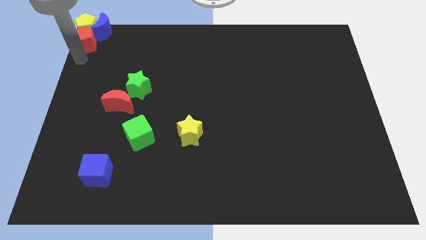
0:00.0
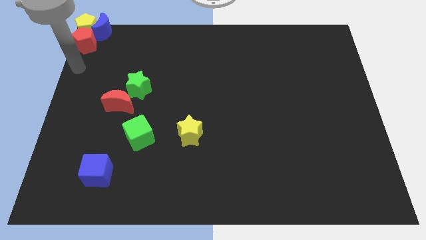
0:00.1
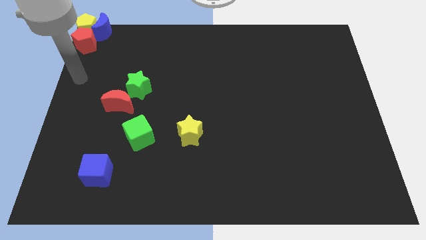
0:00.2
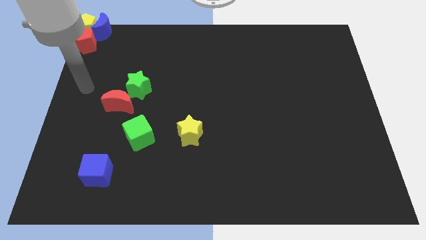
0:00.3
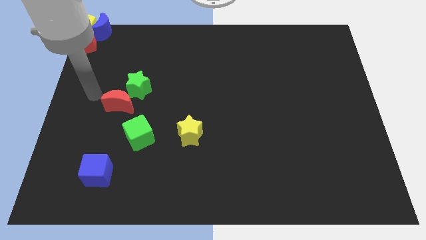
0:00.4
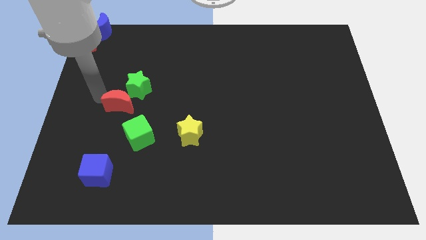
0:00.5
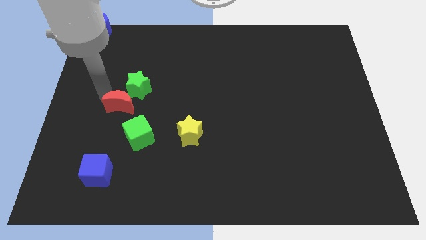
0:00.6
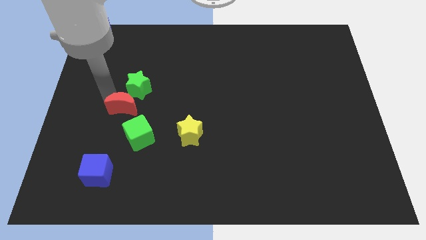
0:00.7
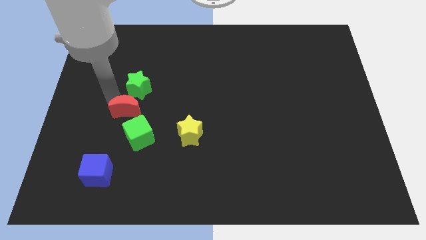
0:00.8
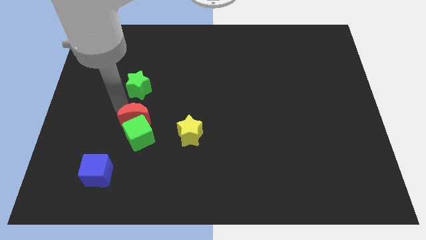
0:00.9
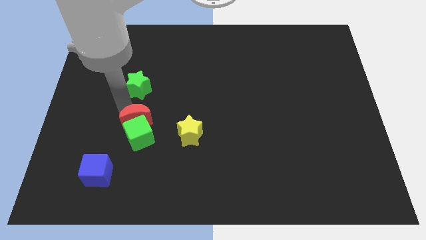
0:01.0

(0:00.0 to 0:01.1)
place the red crescent in between the green blocks

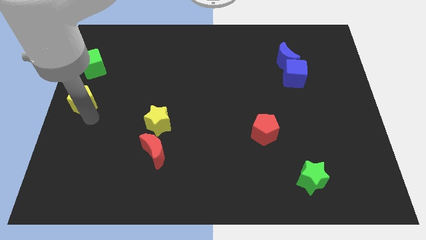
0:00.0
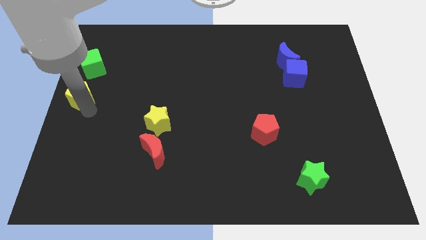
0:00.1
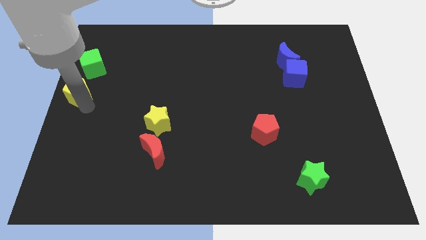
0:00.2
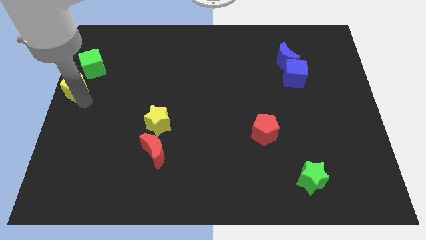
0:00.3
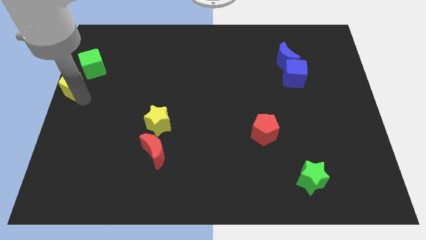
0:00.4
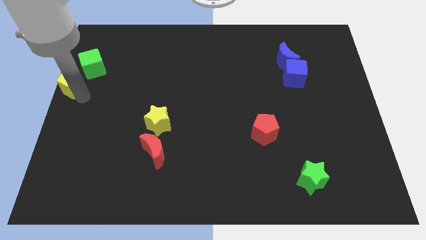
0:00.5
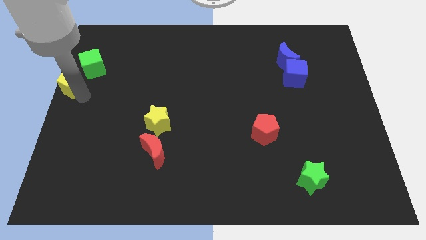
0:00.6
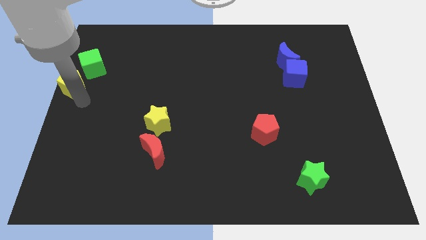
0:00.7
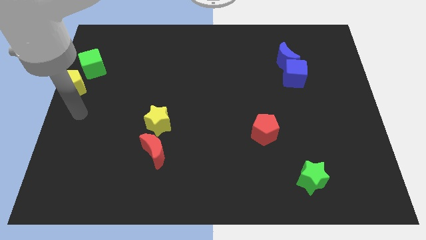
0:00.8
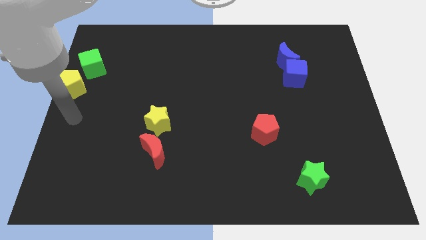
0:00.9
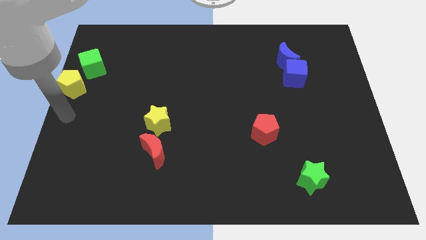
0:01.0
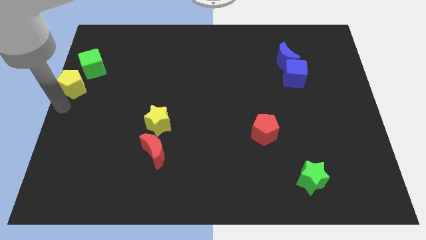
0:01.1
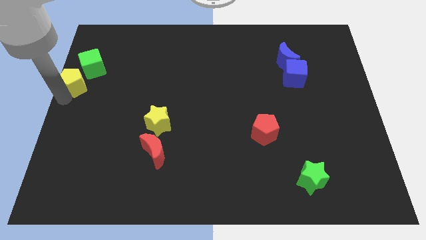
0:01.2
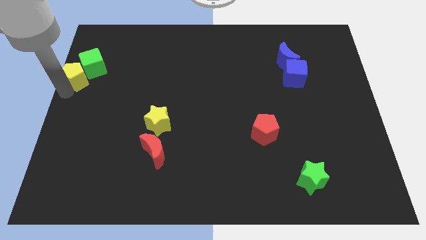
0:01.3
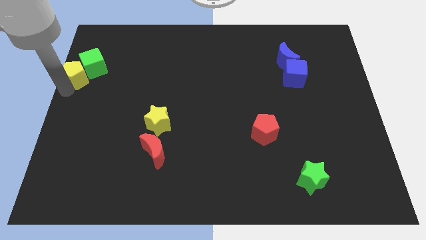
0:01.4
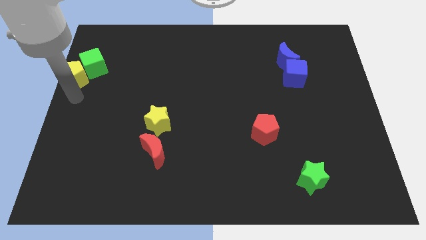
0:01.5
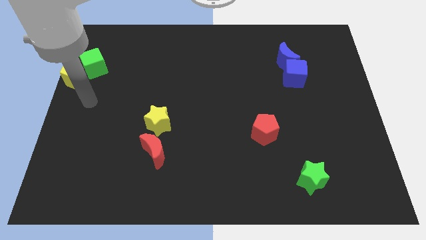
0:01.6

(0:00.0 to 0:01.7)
place the yellow pentagon close to the green cube

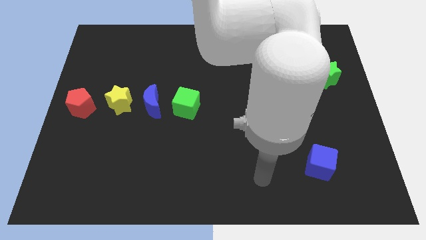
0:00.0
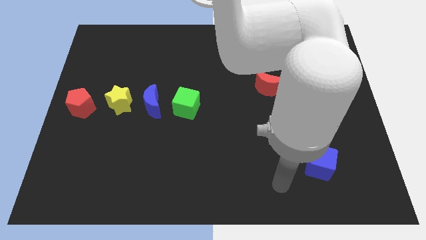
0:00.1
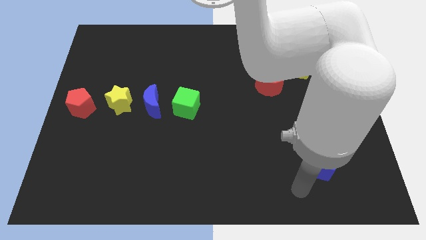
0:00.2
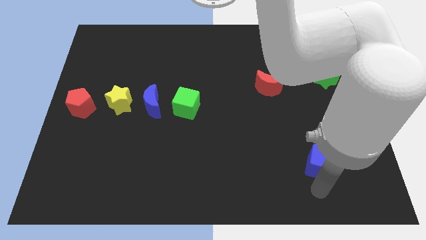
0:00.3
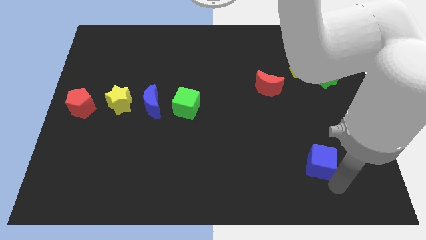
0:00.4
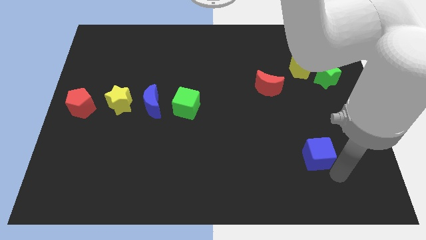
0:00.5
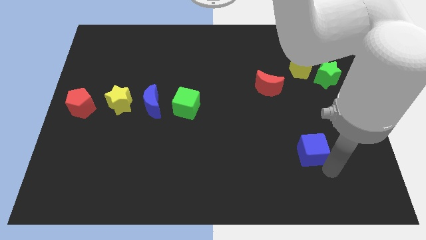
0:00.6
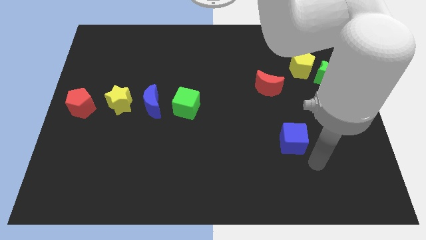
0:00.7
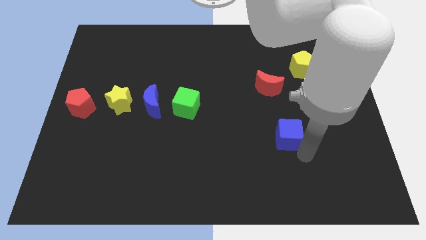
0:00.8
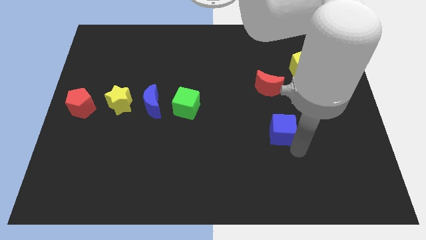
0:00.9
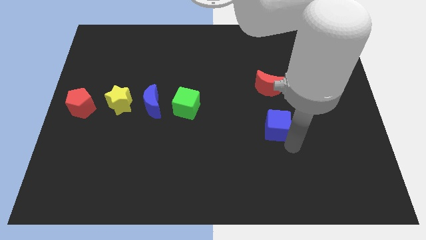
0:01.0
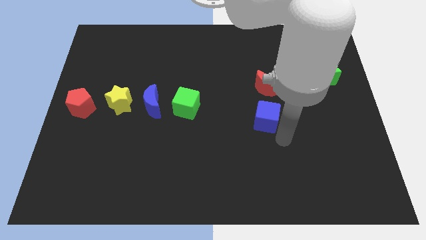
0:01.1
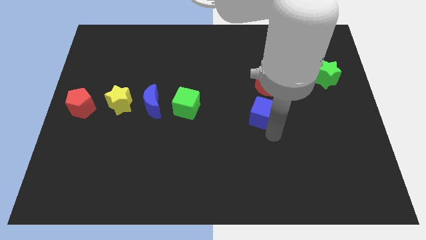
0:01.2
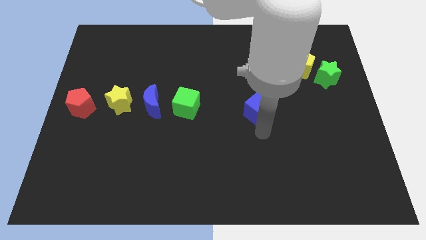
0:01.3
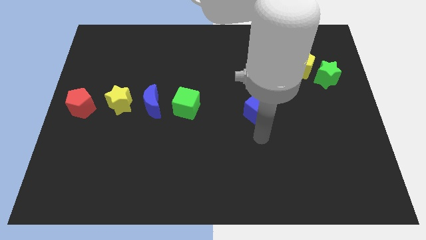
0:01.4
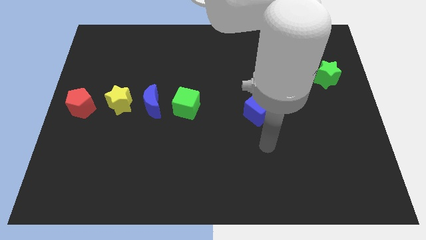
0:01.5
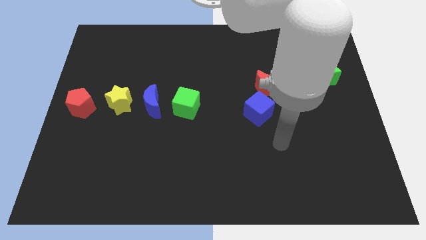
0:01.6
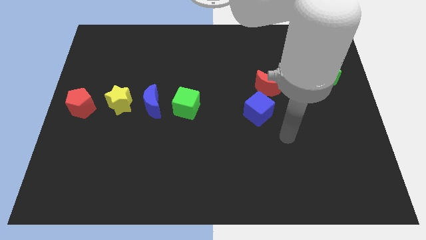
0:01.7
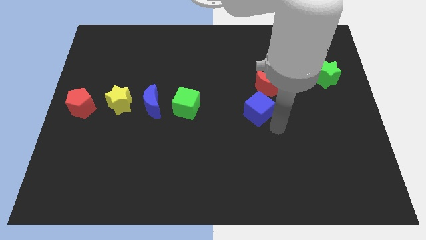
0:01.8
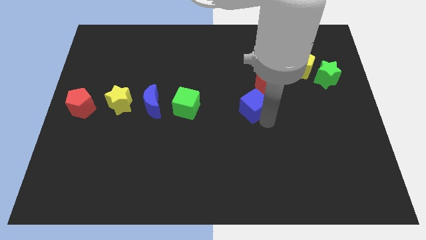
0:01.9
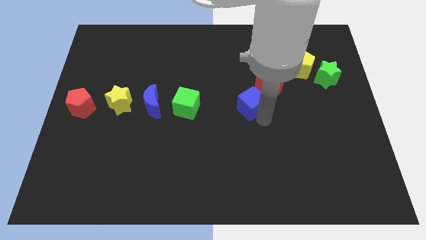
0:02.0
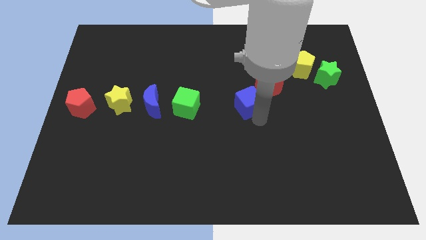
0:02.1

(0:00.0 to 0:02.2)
place the blue cube parallel to the green cube

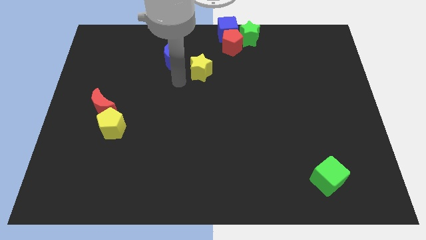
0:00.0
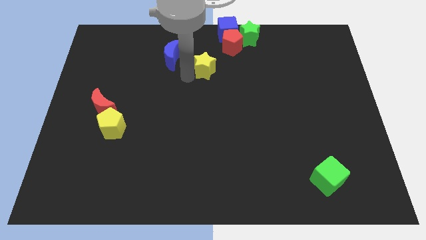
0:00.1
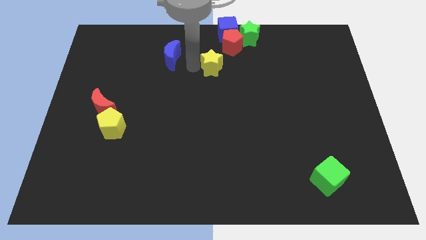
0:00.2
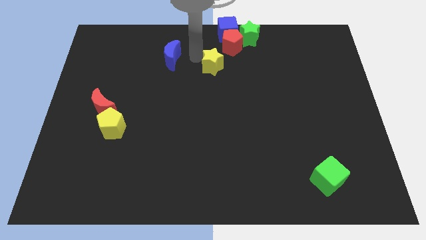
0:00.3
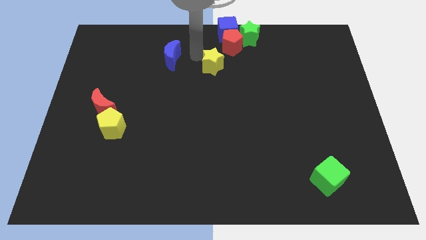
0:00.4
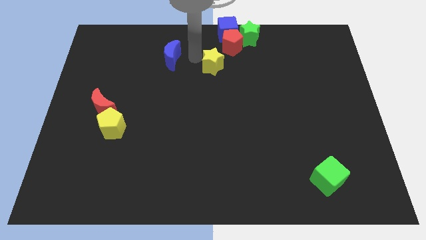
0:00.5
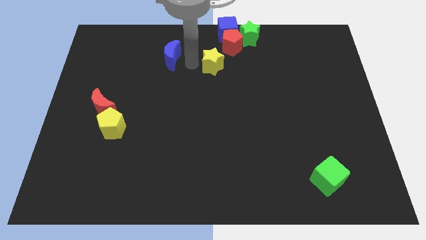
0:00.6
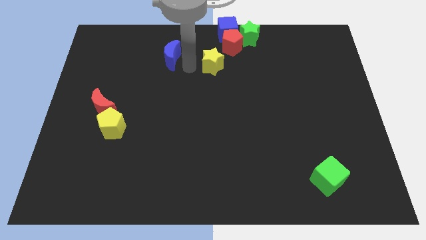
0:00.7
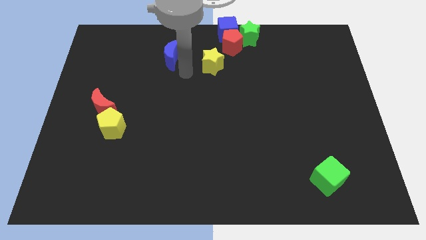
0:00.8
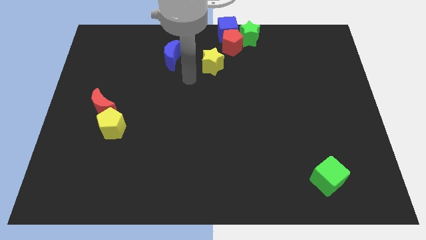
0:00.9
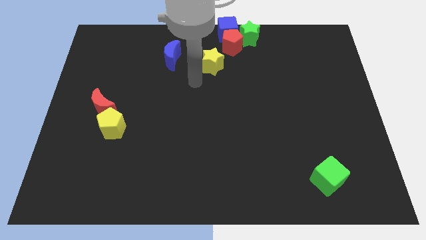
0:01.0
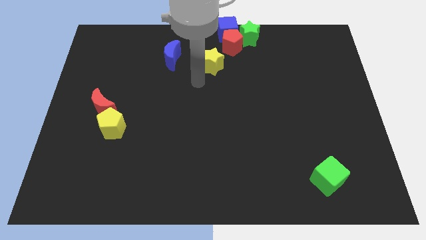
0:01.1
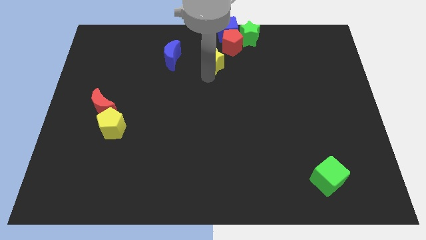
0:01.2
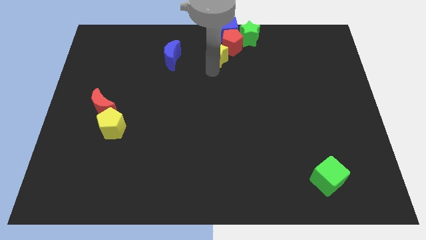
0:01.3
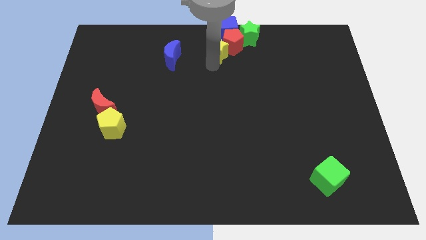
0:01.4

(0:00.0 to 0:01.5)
push the yellow star into the red pentagon

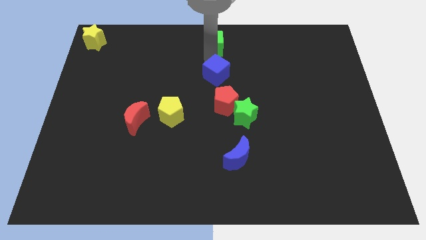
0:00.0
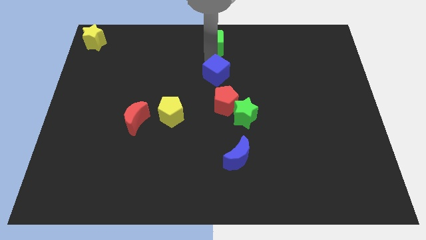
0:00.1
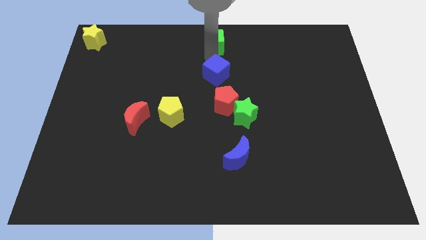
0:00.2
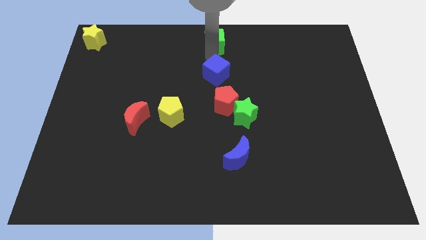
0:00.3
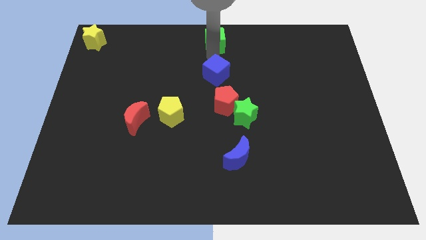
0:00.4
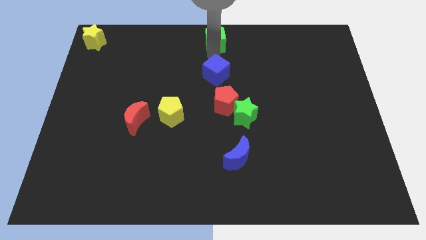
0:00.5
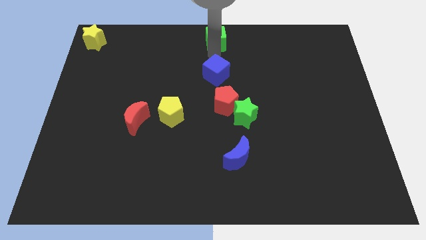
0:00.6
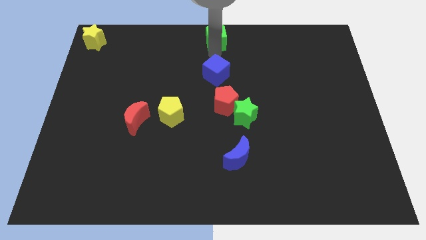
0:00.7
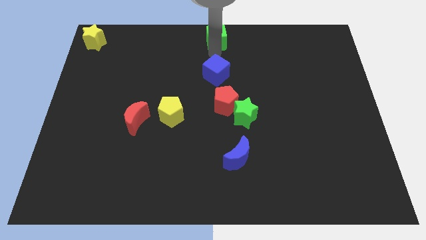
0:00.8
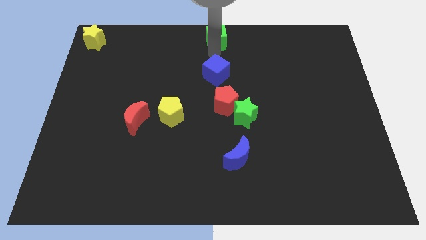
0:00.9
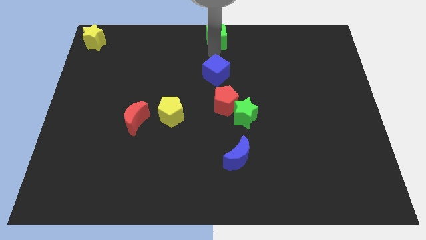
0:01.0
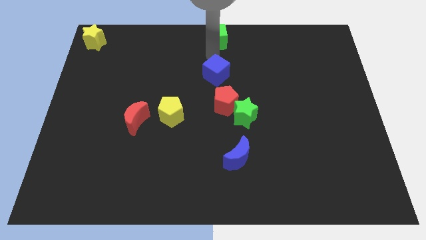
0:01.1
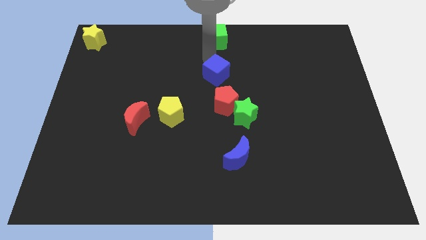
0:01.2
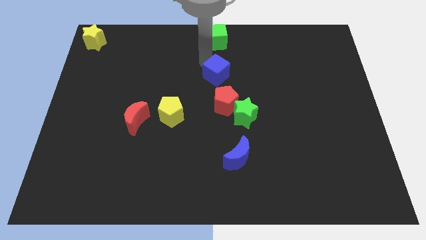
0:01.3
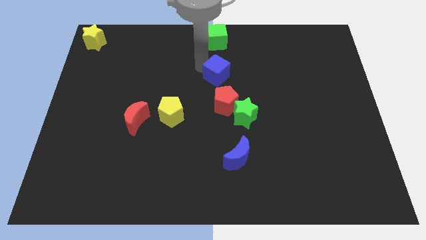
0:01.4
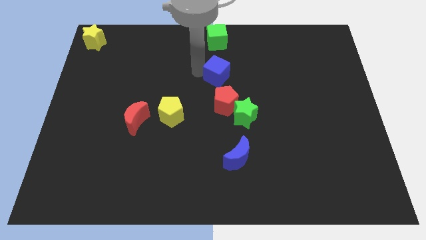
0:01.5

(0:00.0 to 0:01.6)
place the green cube at the top center of the board

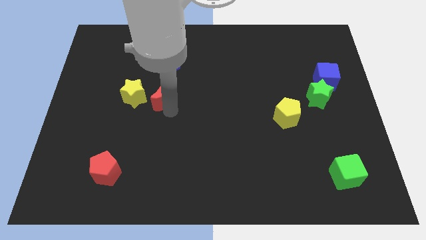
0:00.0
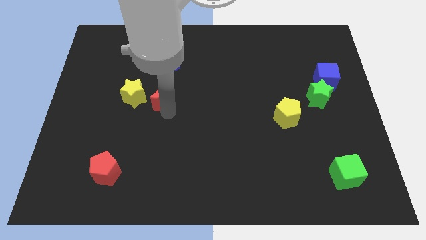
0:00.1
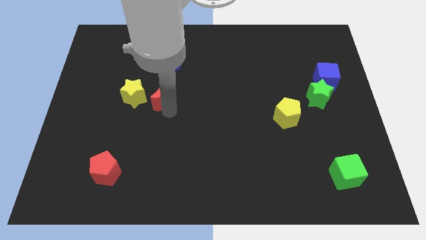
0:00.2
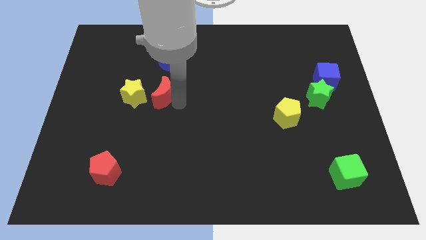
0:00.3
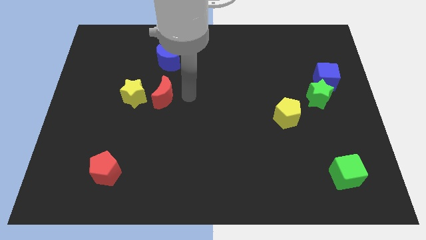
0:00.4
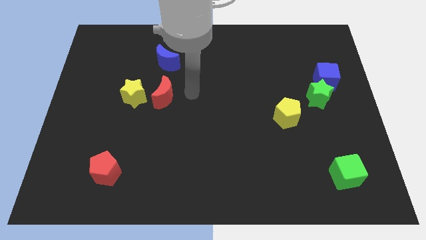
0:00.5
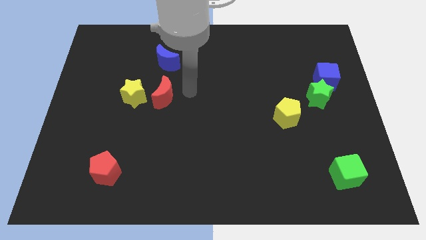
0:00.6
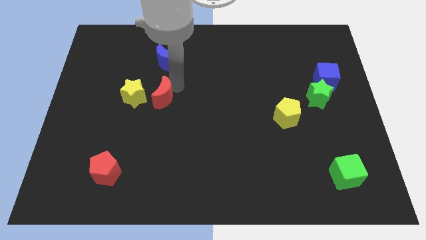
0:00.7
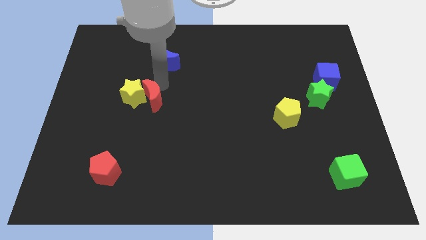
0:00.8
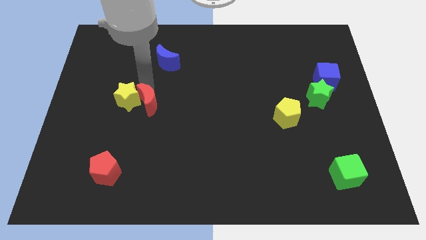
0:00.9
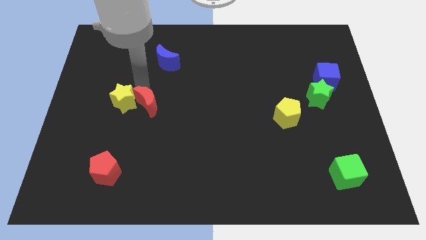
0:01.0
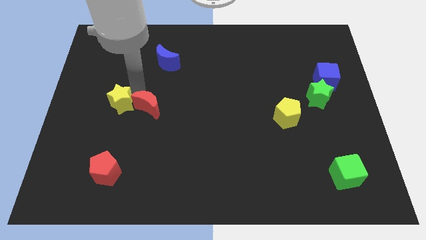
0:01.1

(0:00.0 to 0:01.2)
push the redmoon into the yellow star
